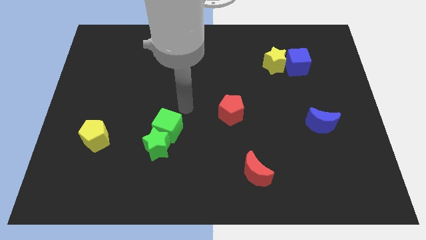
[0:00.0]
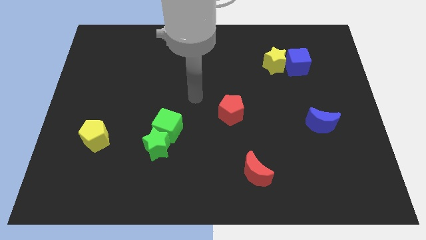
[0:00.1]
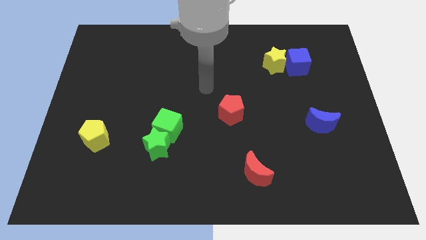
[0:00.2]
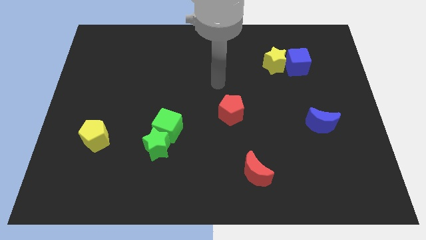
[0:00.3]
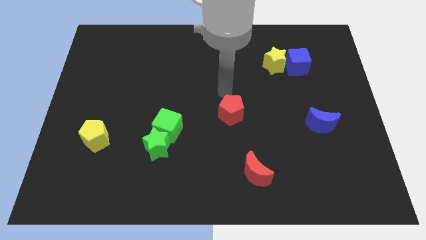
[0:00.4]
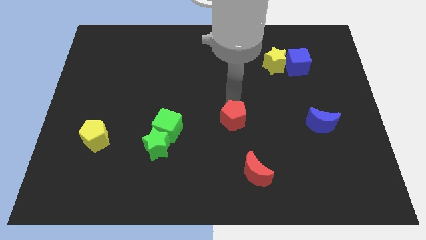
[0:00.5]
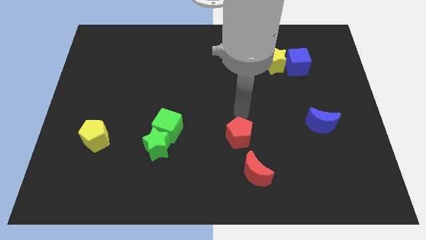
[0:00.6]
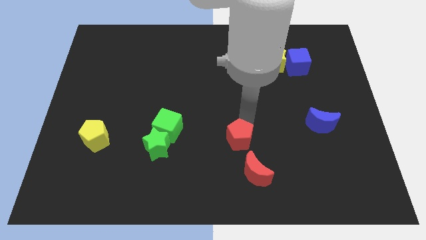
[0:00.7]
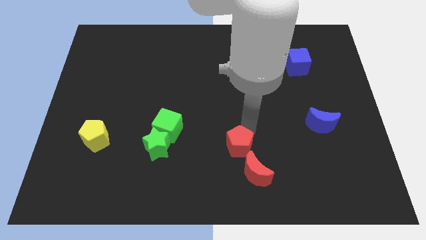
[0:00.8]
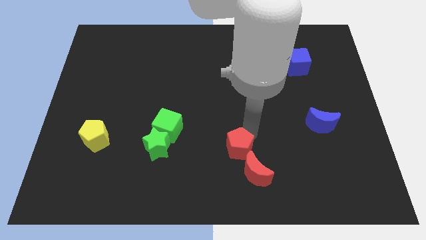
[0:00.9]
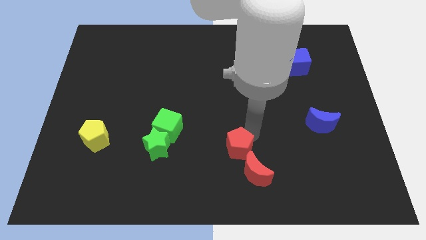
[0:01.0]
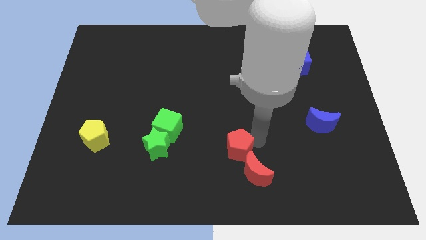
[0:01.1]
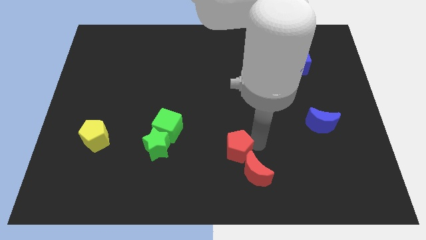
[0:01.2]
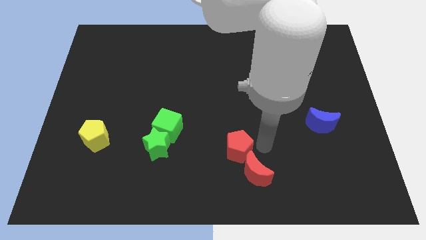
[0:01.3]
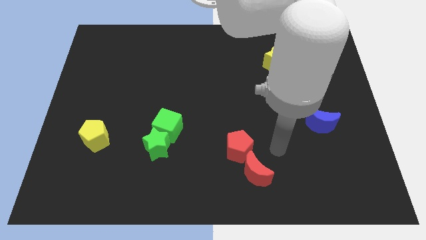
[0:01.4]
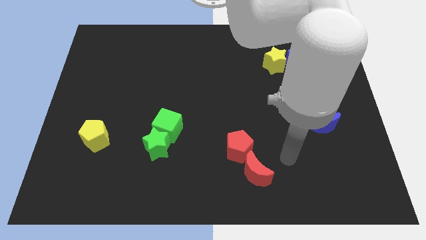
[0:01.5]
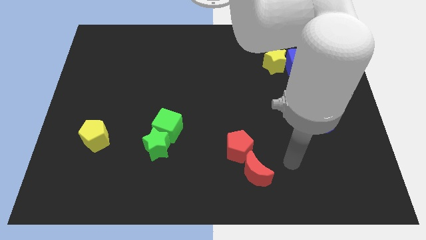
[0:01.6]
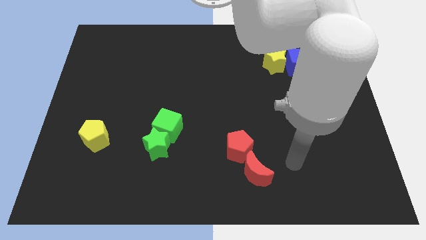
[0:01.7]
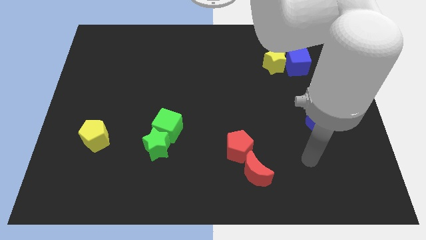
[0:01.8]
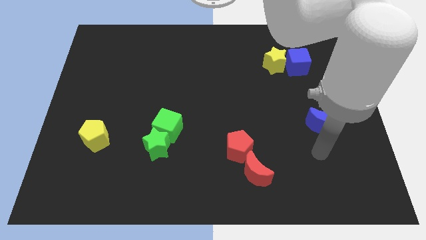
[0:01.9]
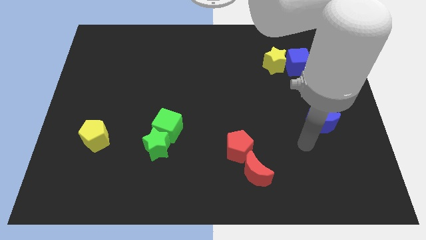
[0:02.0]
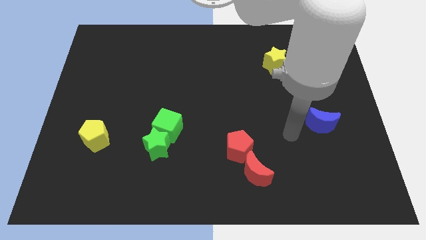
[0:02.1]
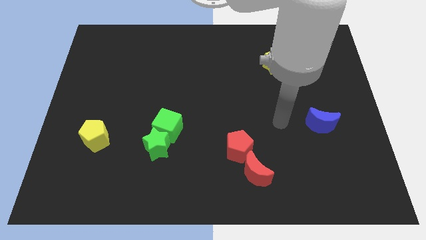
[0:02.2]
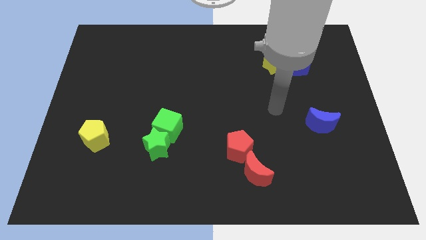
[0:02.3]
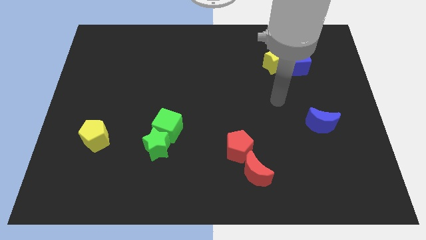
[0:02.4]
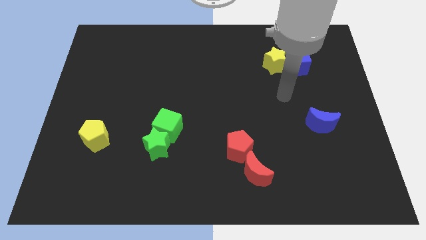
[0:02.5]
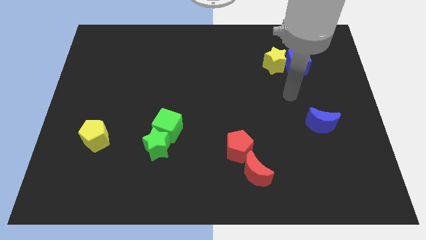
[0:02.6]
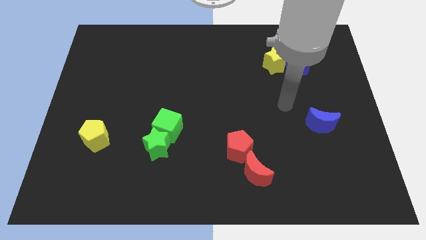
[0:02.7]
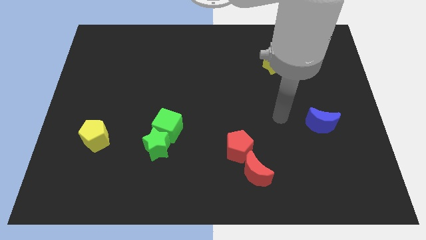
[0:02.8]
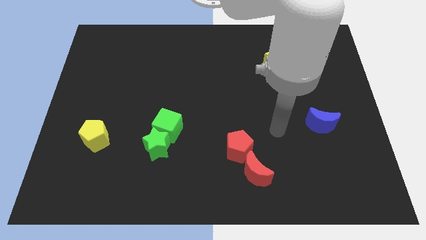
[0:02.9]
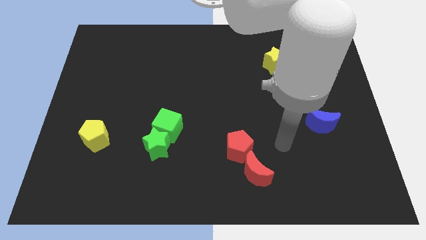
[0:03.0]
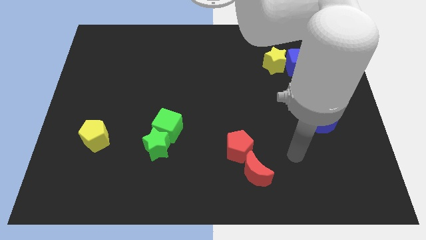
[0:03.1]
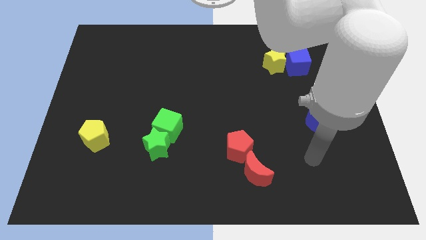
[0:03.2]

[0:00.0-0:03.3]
place the red pentagon above the red crescent

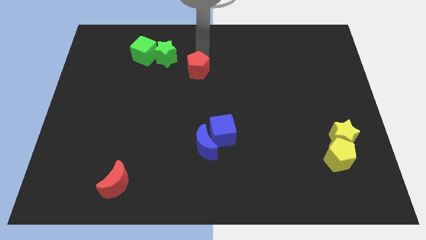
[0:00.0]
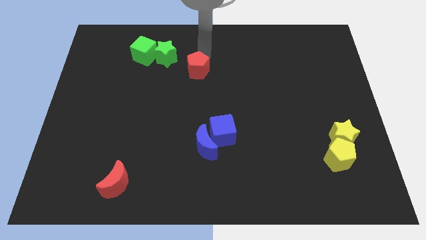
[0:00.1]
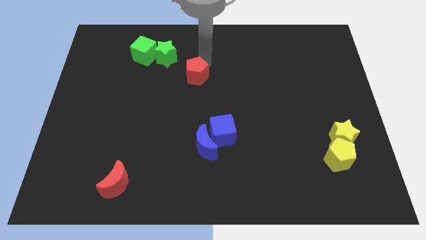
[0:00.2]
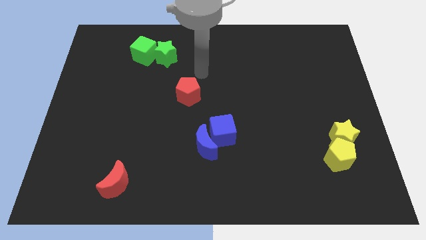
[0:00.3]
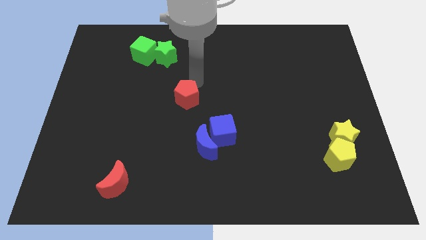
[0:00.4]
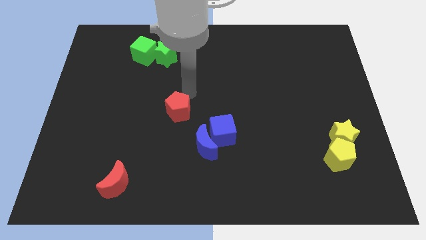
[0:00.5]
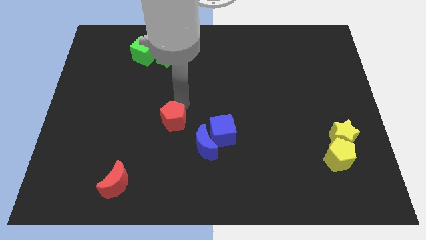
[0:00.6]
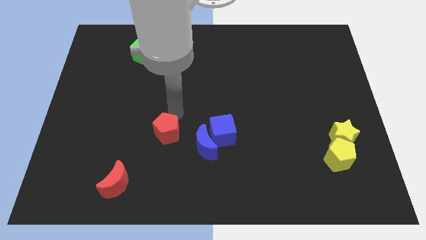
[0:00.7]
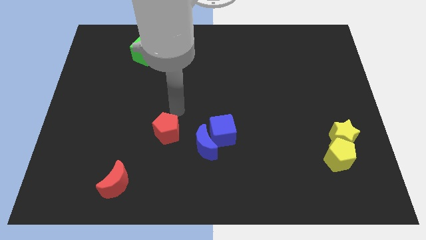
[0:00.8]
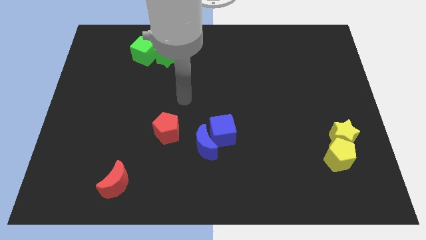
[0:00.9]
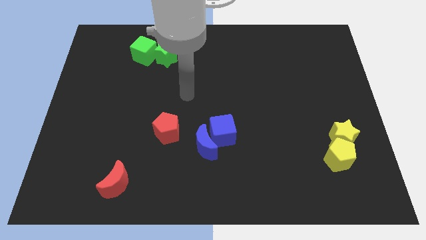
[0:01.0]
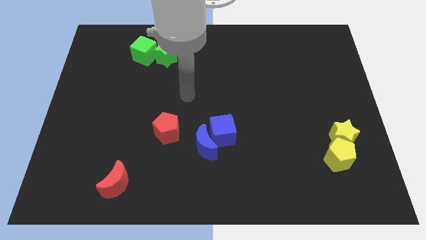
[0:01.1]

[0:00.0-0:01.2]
push the red pentagon to the left side of the blue cube

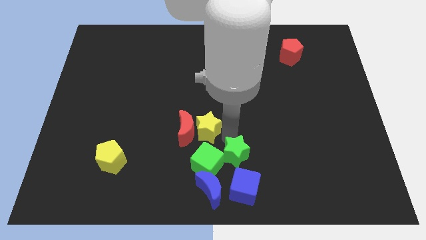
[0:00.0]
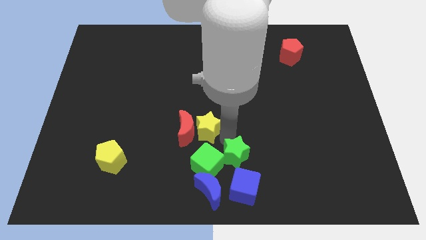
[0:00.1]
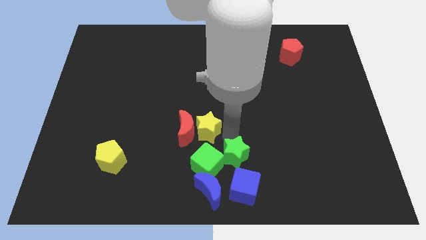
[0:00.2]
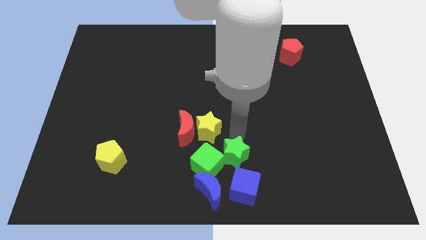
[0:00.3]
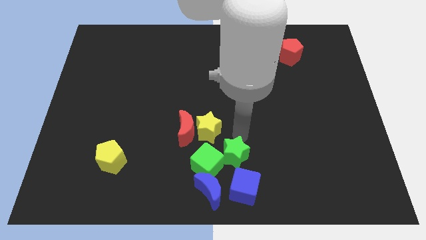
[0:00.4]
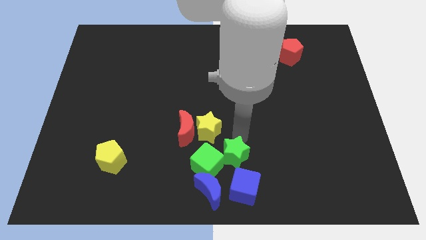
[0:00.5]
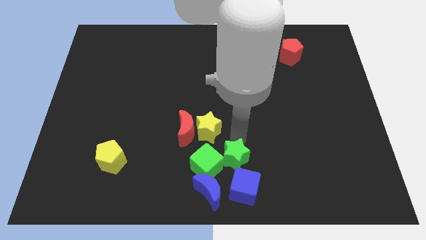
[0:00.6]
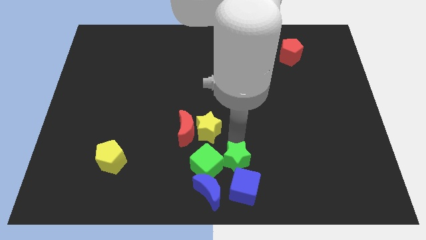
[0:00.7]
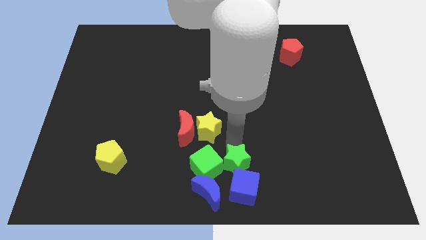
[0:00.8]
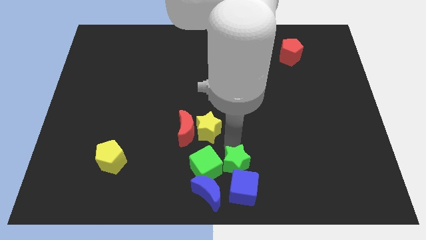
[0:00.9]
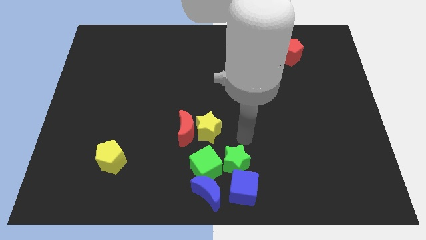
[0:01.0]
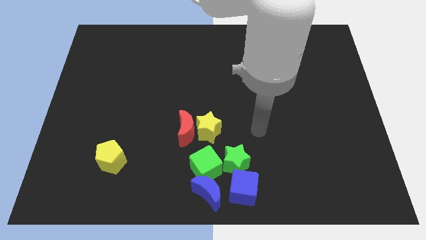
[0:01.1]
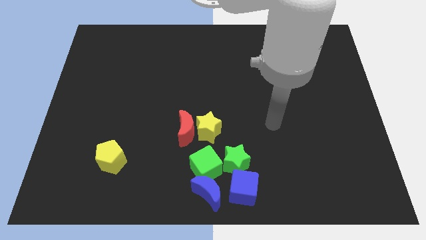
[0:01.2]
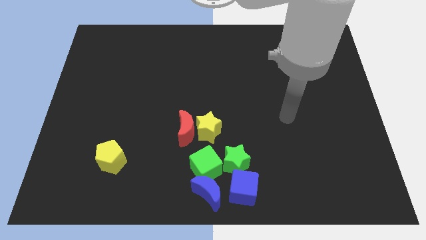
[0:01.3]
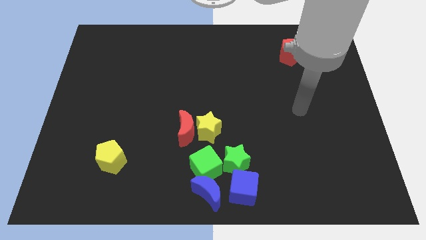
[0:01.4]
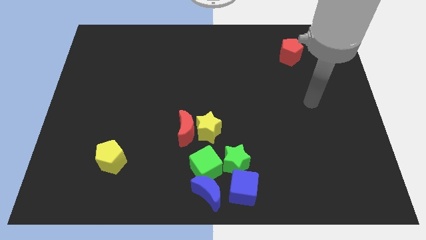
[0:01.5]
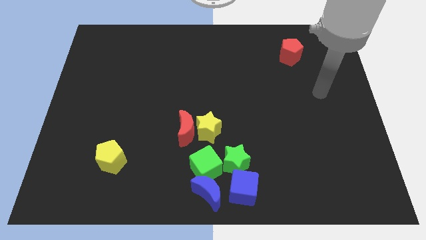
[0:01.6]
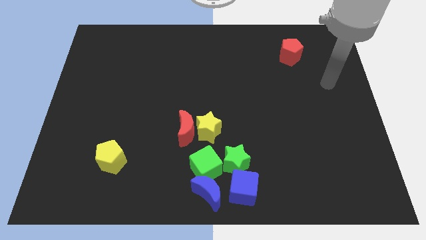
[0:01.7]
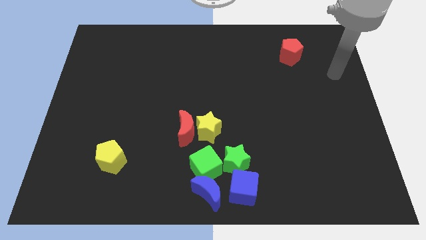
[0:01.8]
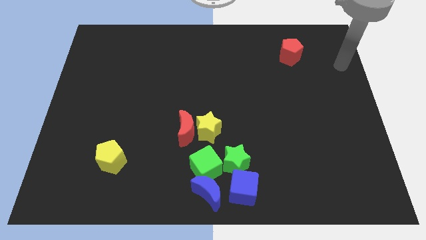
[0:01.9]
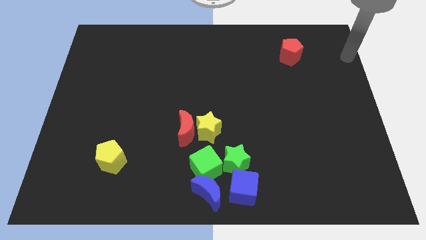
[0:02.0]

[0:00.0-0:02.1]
move the arm to the right side of the red pentagon

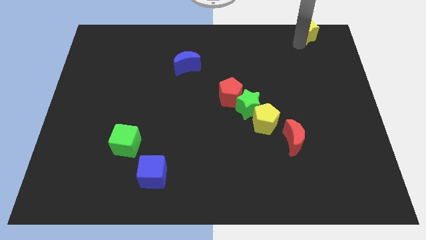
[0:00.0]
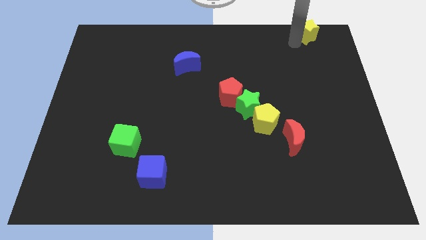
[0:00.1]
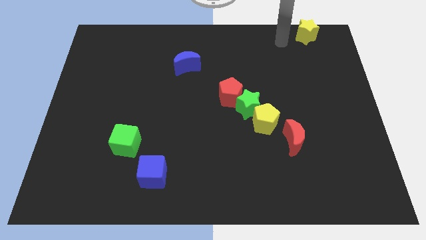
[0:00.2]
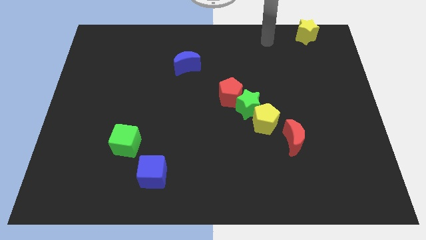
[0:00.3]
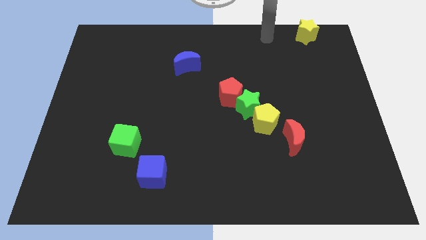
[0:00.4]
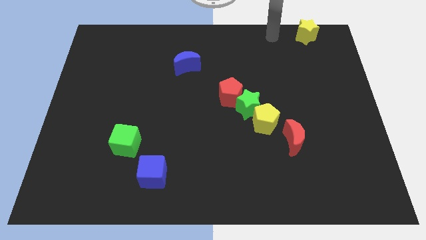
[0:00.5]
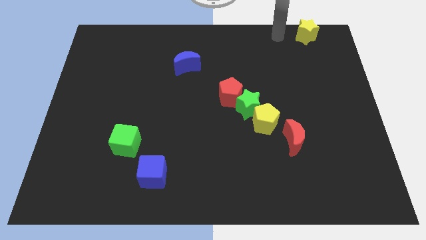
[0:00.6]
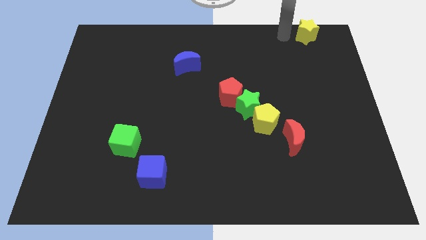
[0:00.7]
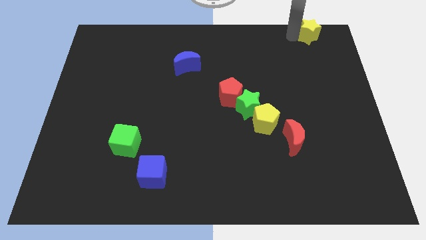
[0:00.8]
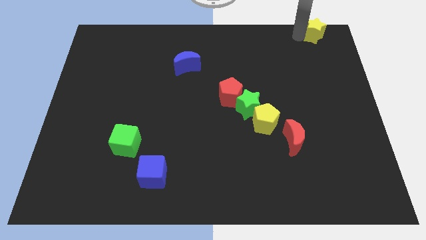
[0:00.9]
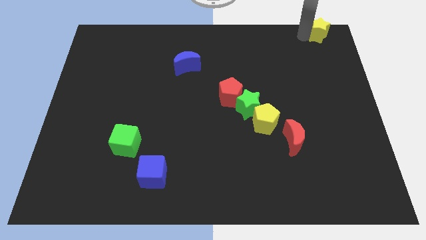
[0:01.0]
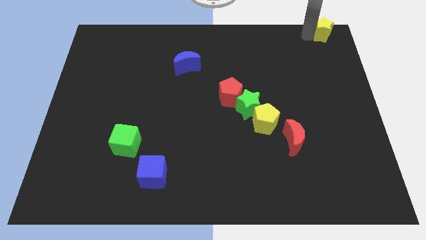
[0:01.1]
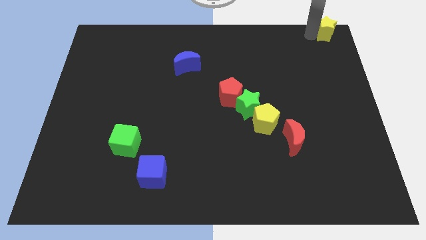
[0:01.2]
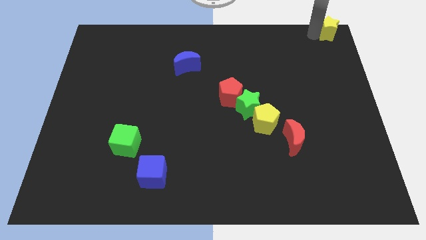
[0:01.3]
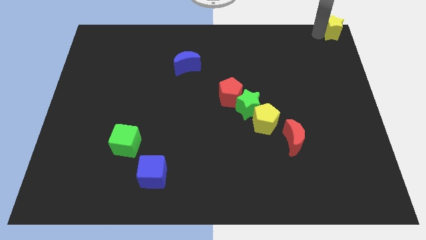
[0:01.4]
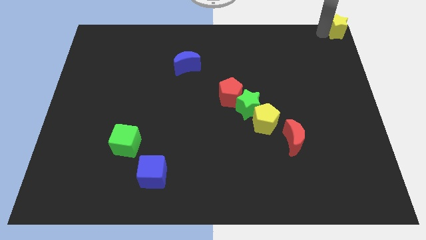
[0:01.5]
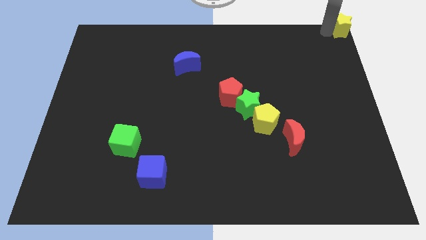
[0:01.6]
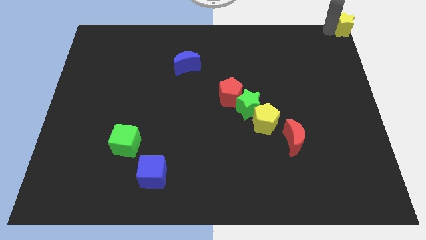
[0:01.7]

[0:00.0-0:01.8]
move the yellow star to the top right corner of the board

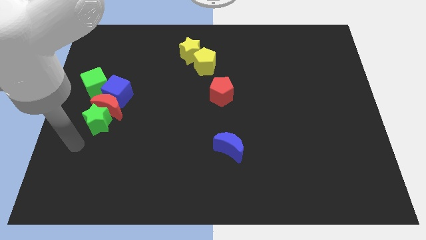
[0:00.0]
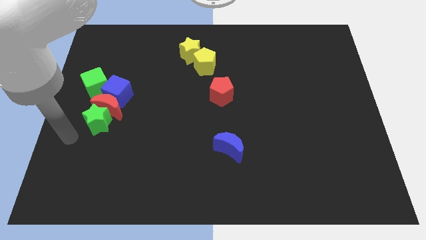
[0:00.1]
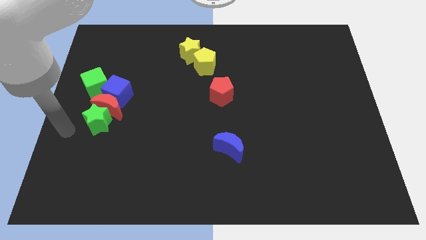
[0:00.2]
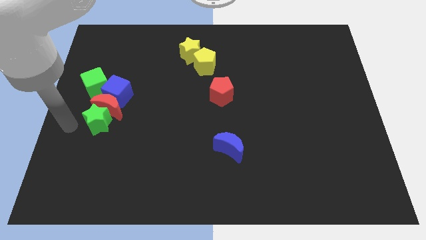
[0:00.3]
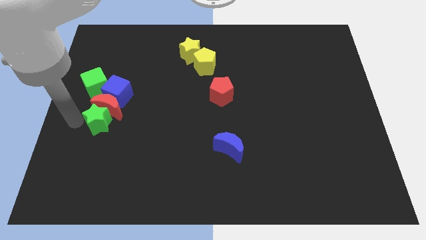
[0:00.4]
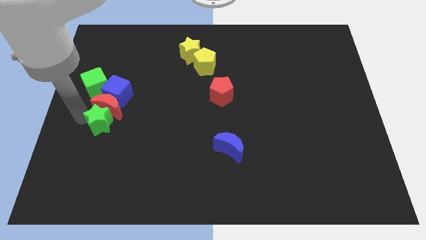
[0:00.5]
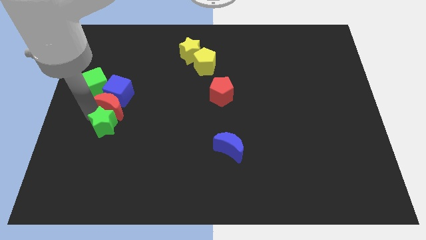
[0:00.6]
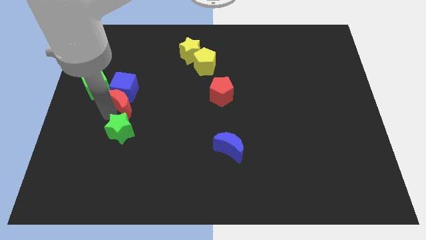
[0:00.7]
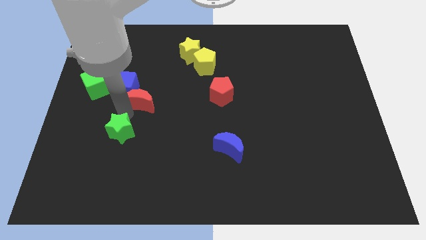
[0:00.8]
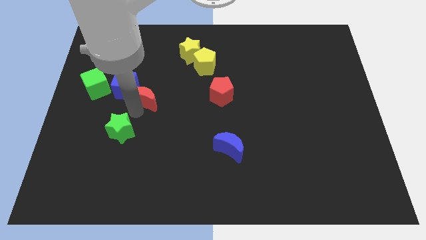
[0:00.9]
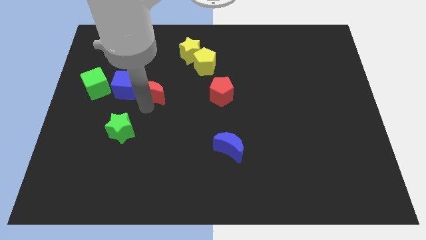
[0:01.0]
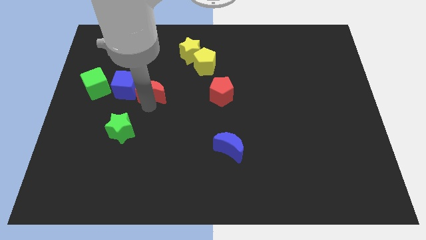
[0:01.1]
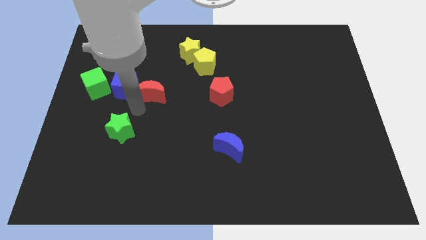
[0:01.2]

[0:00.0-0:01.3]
split the red moon from the top side of the green star
